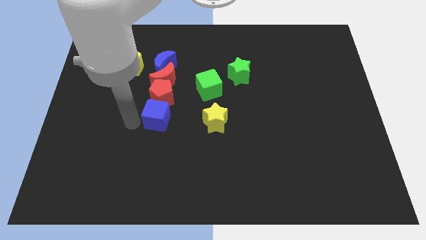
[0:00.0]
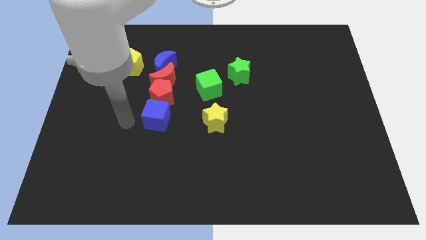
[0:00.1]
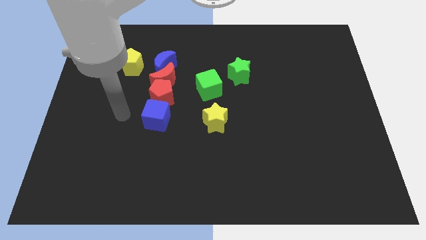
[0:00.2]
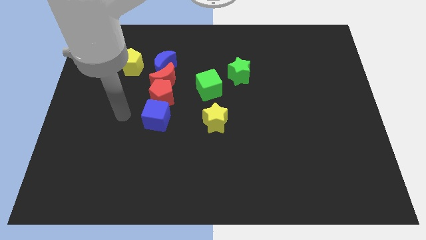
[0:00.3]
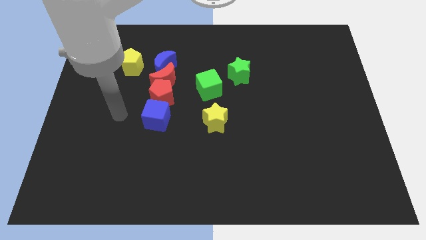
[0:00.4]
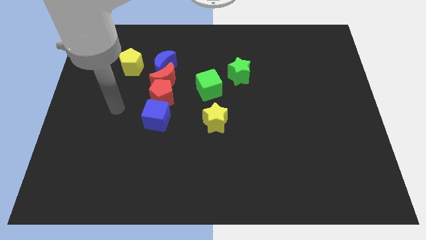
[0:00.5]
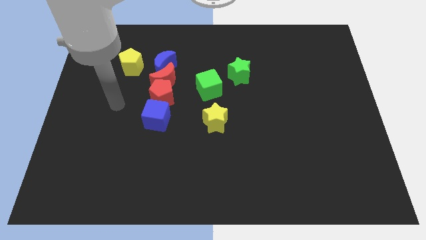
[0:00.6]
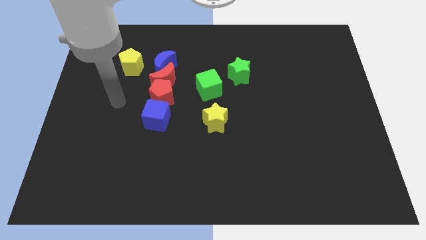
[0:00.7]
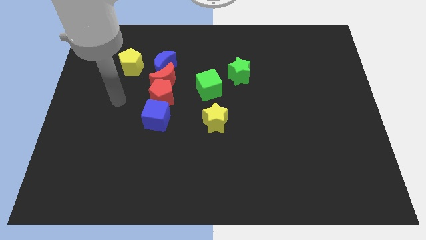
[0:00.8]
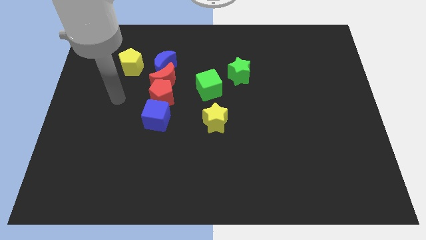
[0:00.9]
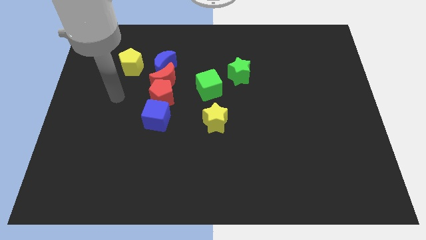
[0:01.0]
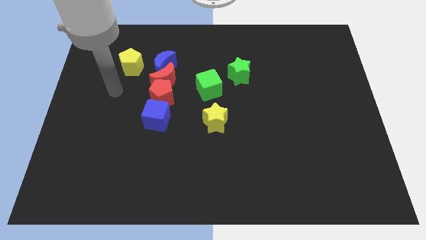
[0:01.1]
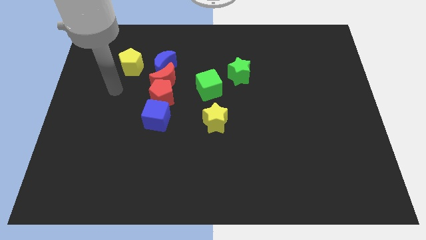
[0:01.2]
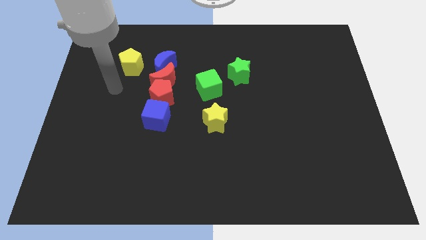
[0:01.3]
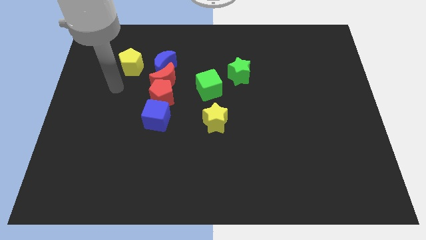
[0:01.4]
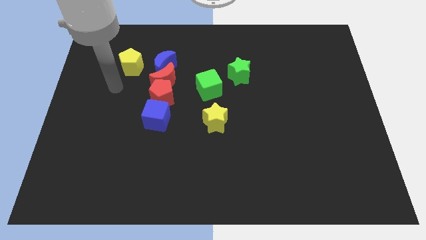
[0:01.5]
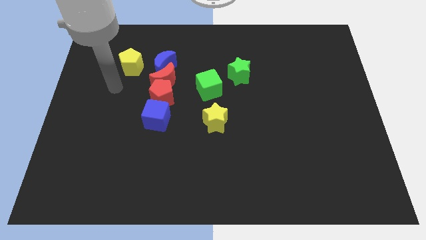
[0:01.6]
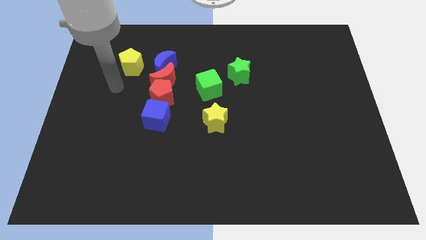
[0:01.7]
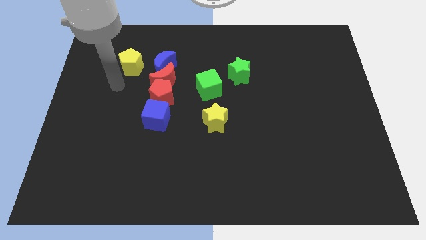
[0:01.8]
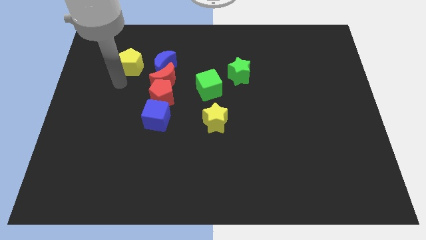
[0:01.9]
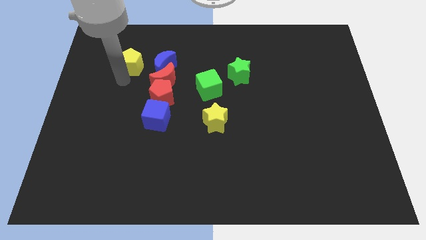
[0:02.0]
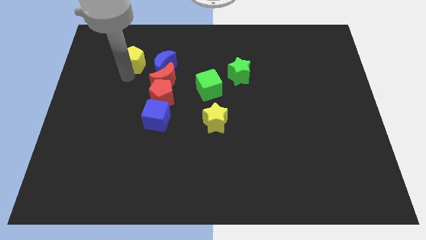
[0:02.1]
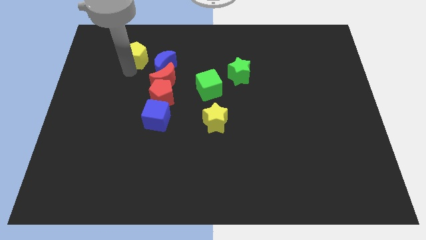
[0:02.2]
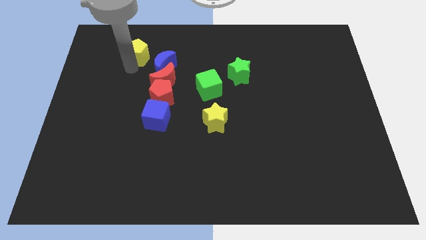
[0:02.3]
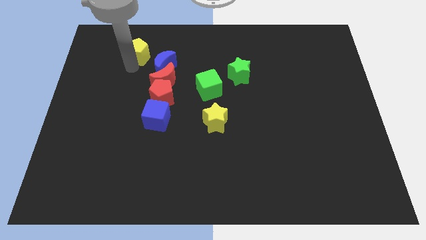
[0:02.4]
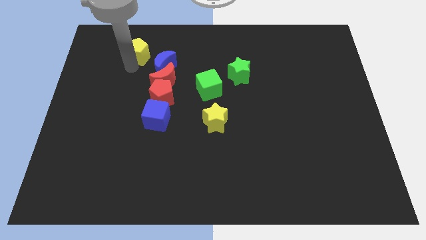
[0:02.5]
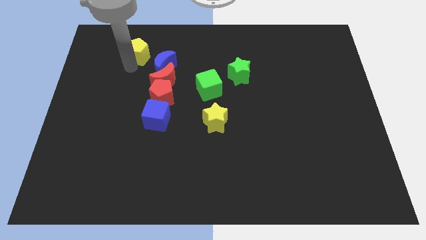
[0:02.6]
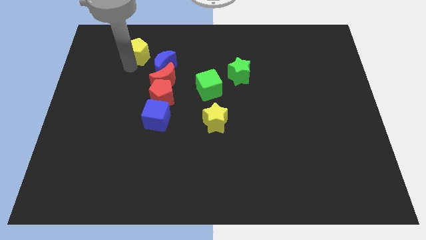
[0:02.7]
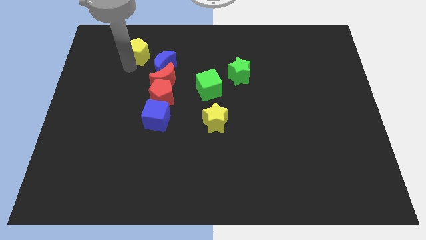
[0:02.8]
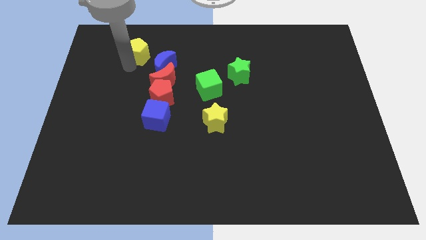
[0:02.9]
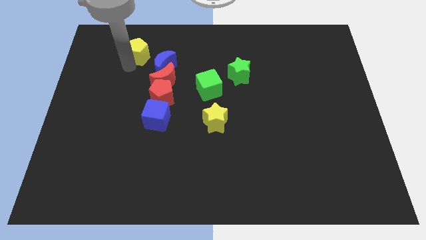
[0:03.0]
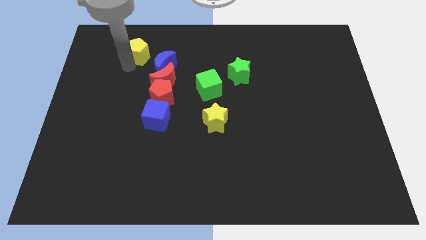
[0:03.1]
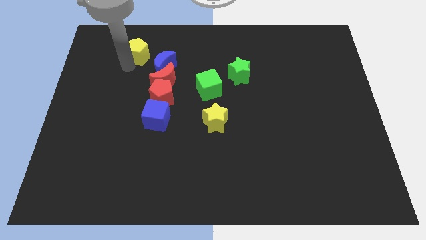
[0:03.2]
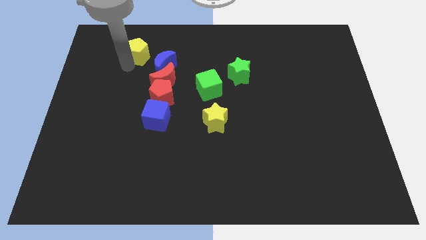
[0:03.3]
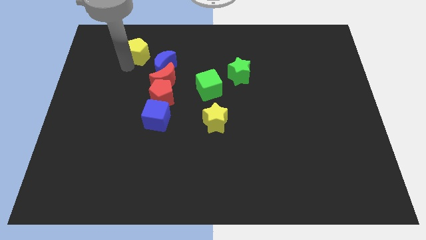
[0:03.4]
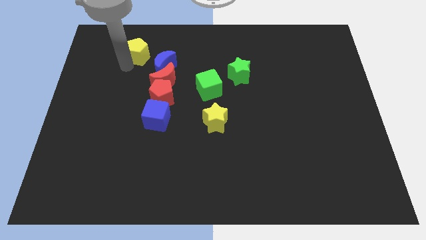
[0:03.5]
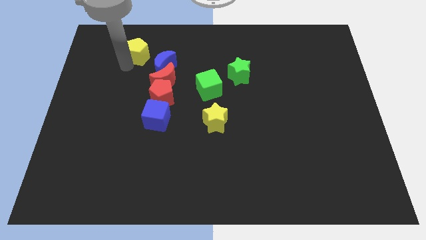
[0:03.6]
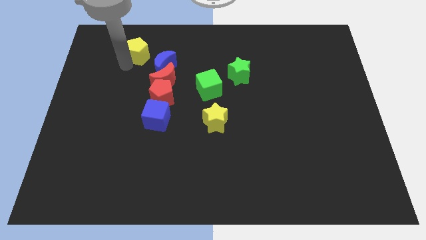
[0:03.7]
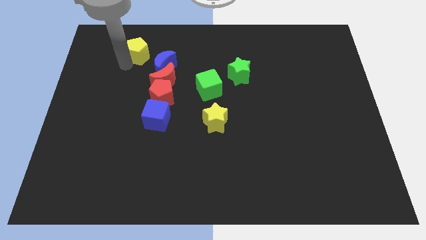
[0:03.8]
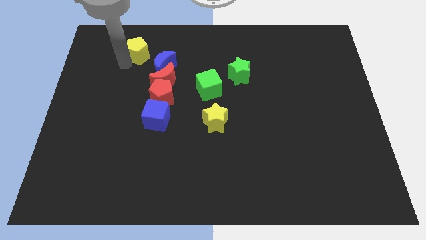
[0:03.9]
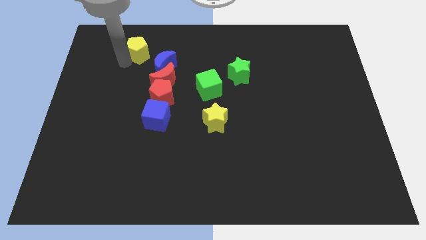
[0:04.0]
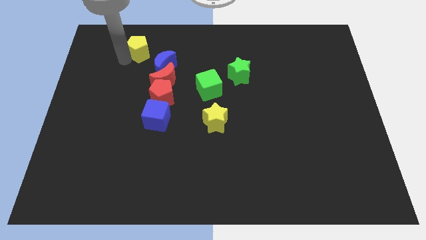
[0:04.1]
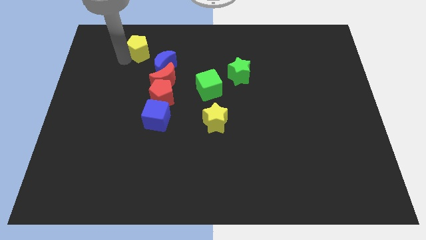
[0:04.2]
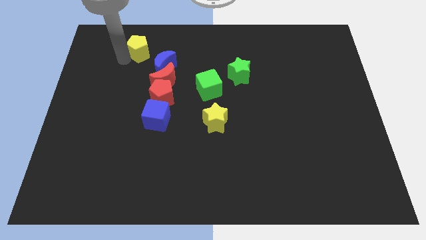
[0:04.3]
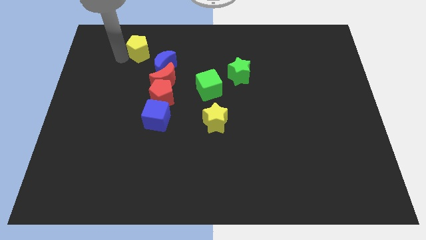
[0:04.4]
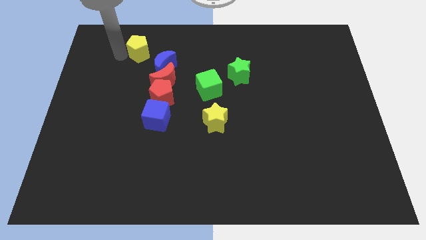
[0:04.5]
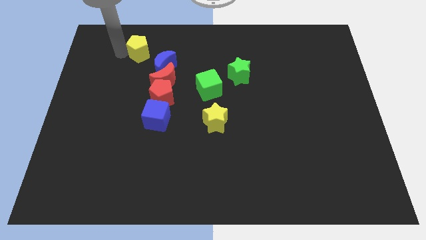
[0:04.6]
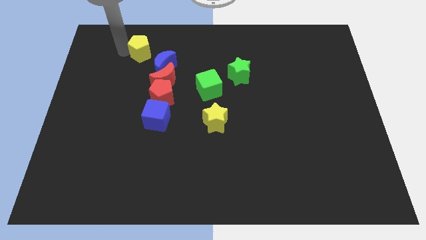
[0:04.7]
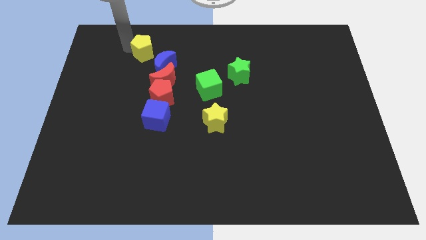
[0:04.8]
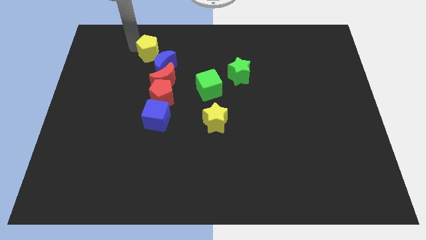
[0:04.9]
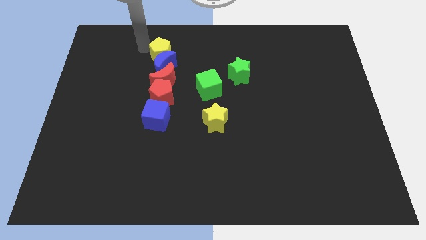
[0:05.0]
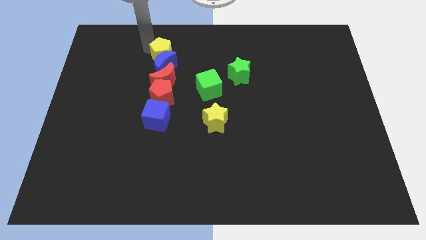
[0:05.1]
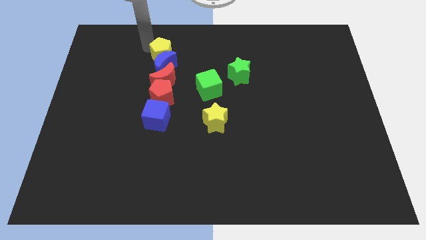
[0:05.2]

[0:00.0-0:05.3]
push the yellow pentagon to the top of the blue crescent

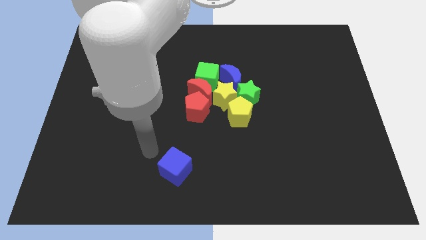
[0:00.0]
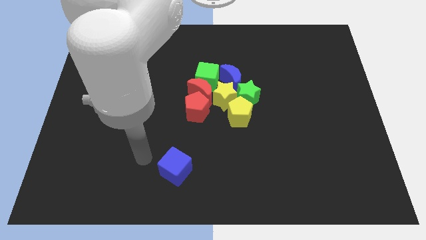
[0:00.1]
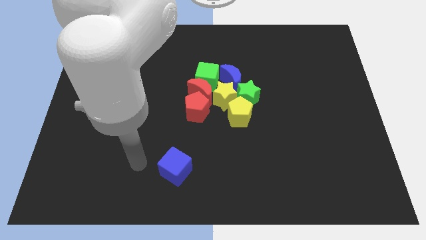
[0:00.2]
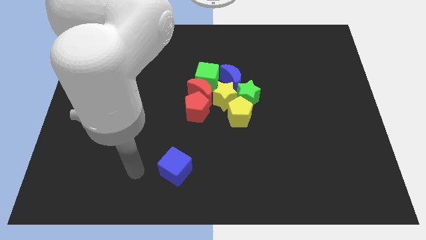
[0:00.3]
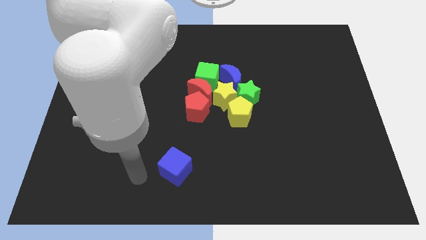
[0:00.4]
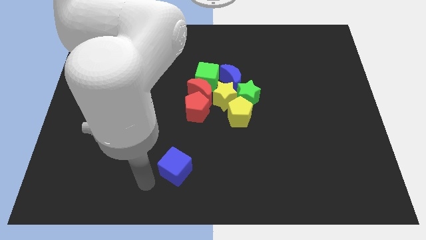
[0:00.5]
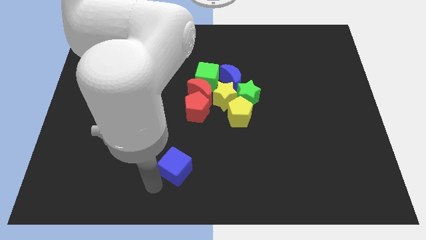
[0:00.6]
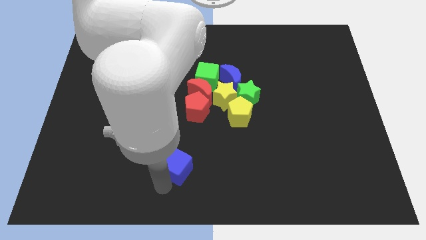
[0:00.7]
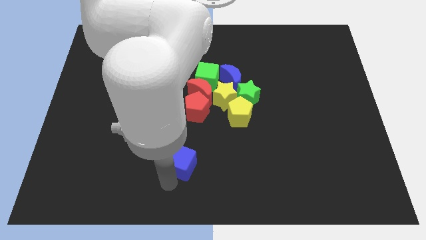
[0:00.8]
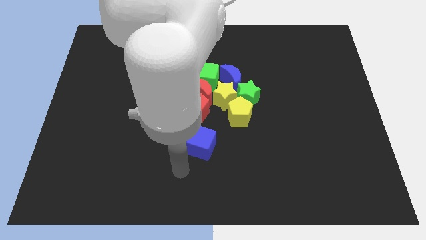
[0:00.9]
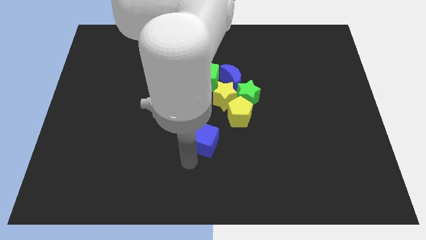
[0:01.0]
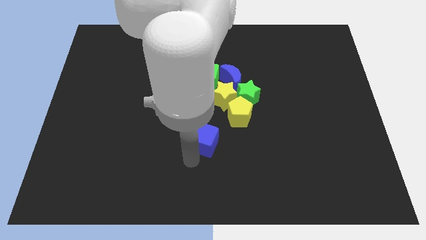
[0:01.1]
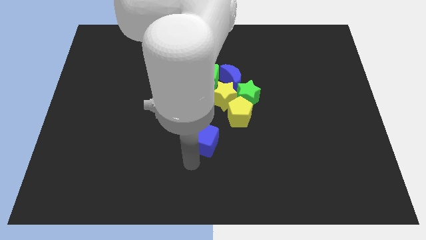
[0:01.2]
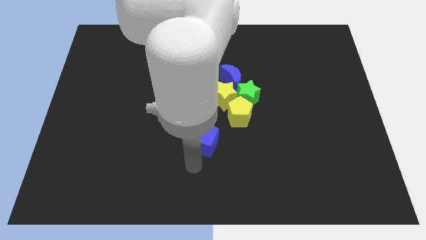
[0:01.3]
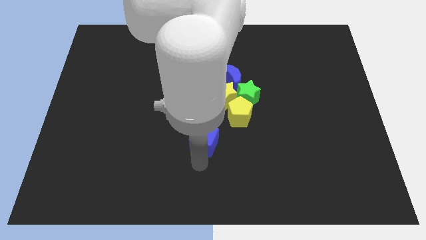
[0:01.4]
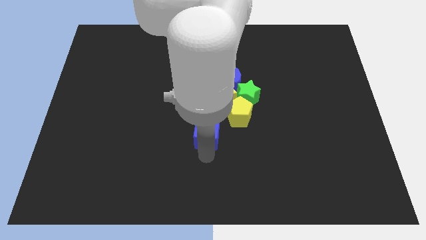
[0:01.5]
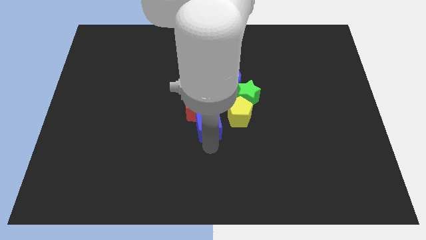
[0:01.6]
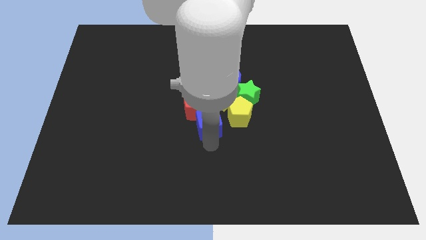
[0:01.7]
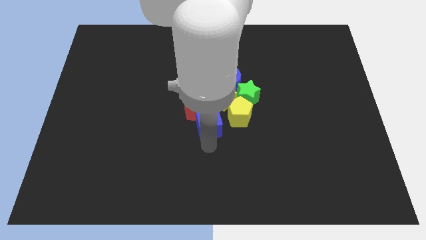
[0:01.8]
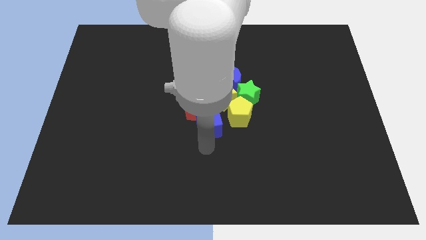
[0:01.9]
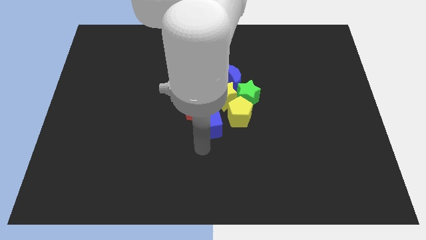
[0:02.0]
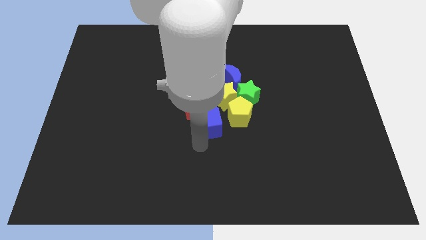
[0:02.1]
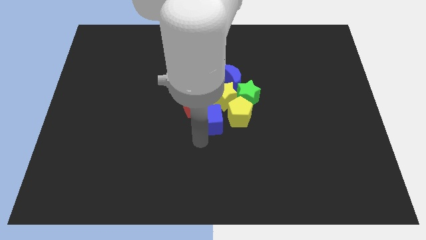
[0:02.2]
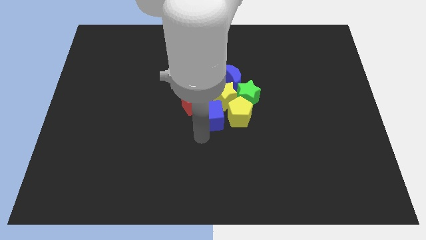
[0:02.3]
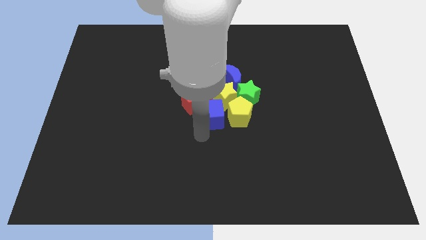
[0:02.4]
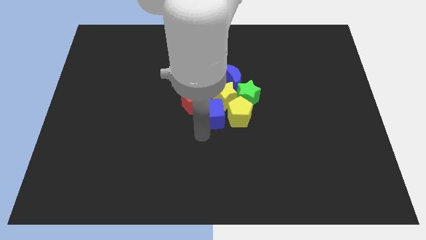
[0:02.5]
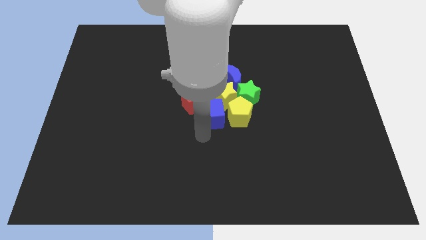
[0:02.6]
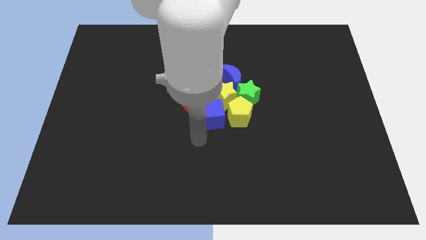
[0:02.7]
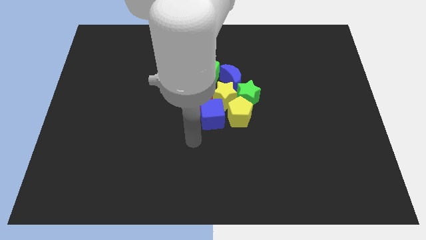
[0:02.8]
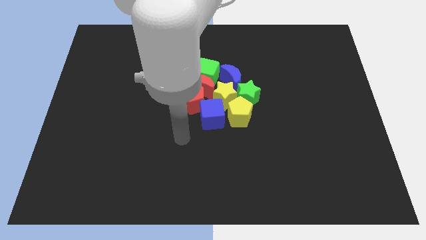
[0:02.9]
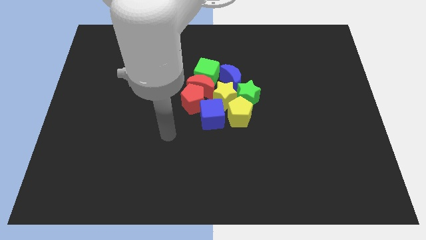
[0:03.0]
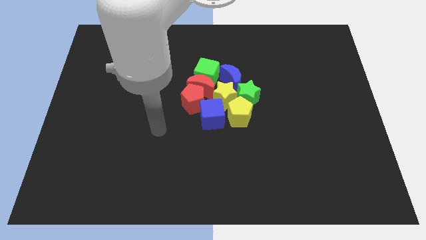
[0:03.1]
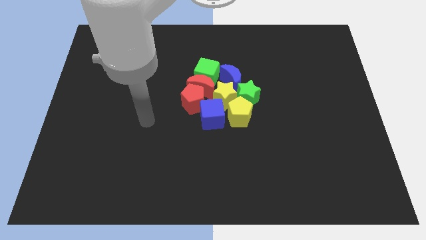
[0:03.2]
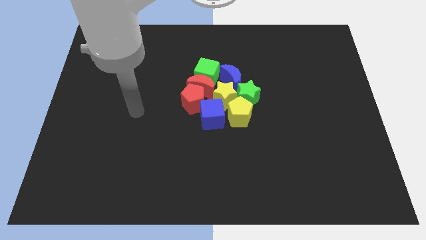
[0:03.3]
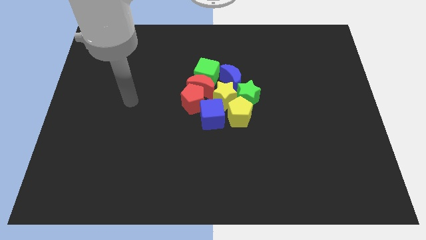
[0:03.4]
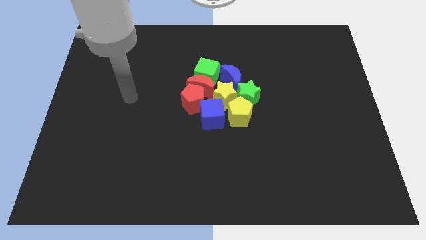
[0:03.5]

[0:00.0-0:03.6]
drag blue cube to the bottom of the yellow star to form a group of blocks

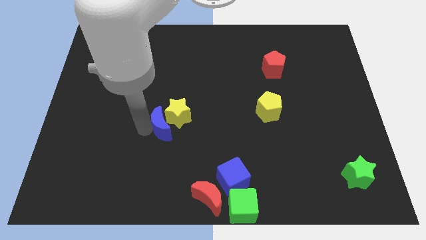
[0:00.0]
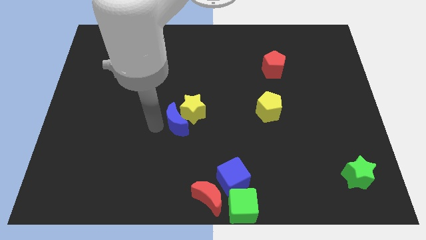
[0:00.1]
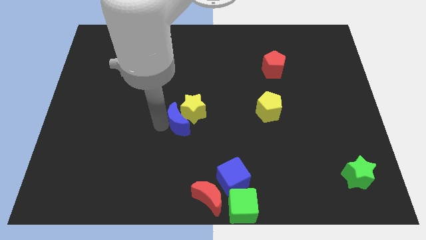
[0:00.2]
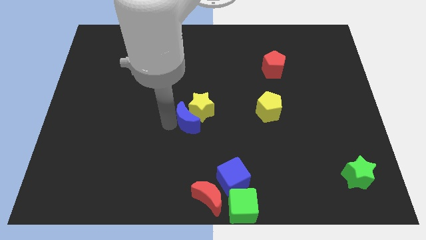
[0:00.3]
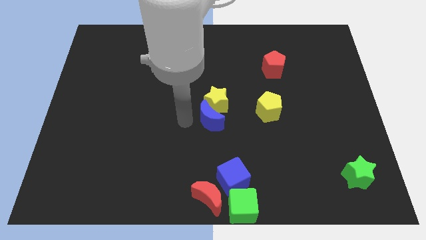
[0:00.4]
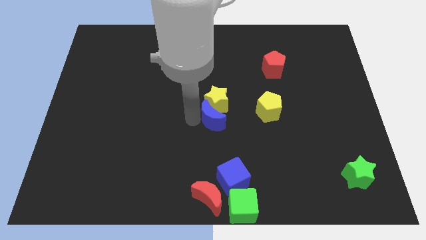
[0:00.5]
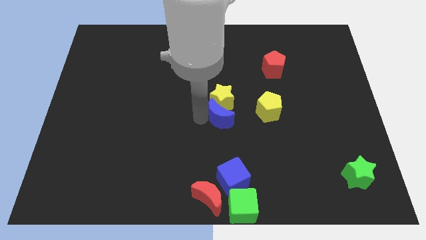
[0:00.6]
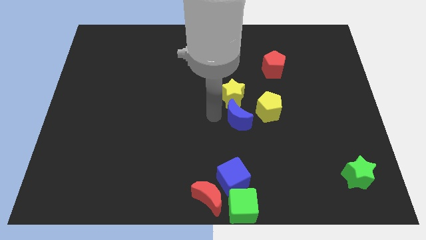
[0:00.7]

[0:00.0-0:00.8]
move the yellow star along with the blue crescent to the center of the board
